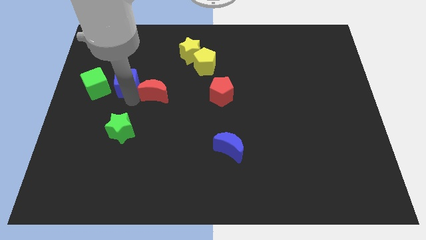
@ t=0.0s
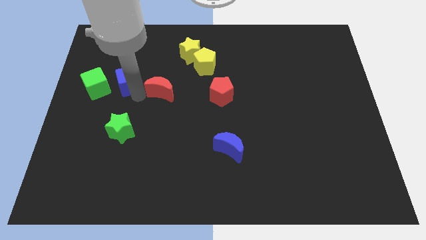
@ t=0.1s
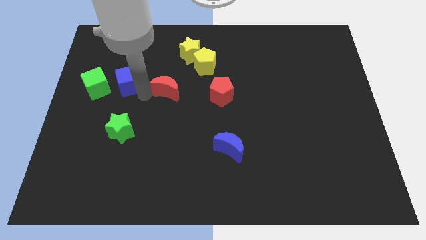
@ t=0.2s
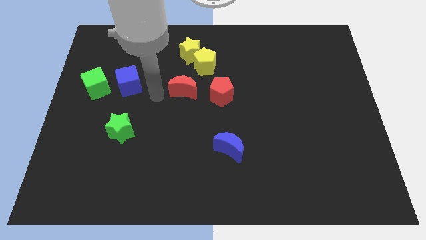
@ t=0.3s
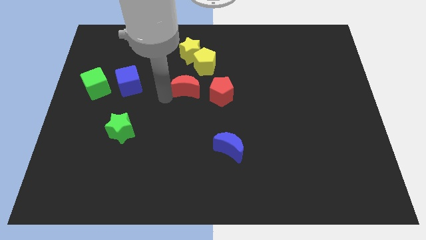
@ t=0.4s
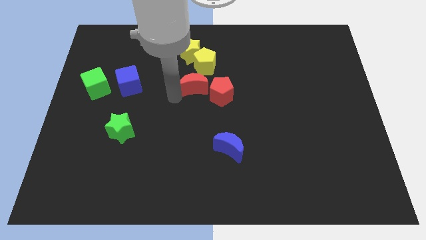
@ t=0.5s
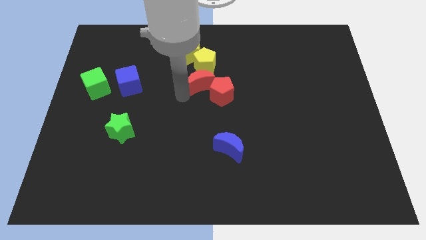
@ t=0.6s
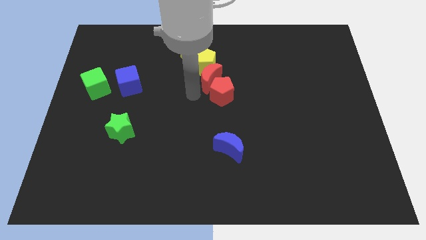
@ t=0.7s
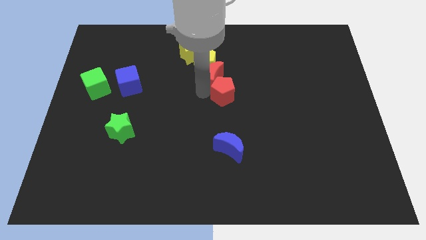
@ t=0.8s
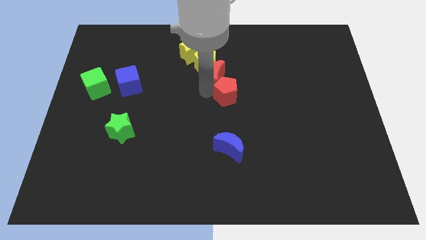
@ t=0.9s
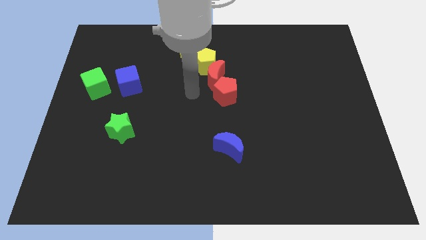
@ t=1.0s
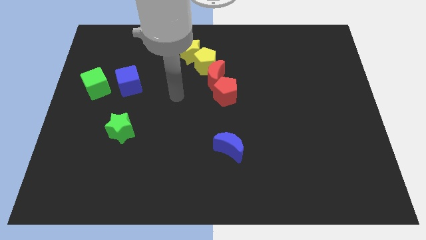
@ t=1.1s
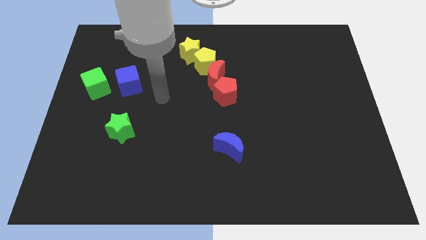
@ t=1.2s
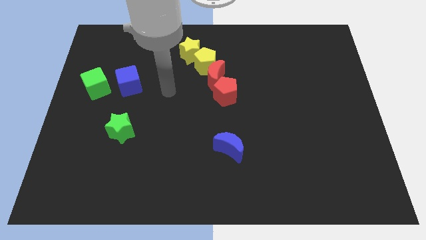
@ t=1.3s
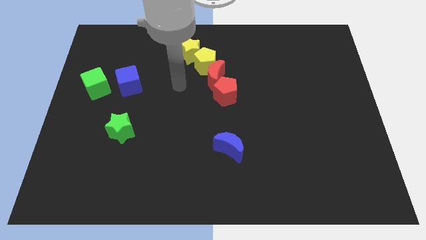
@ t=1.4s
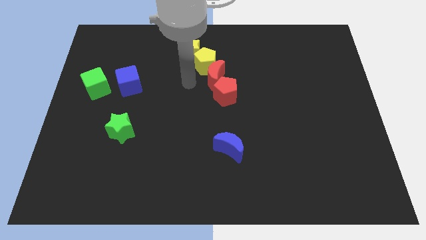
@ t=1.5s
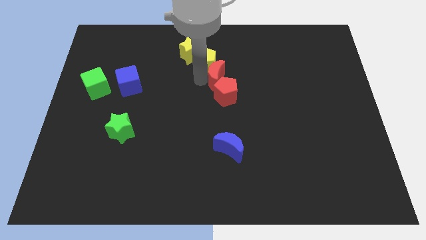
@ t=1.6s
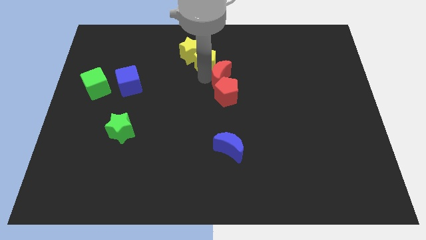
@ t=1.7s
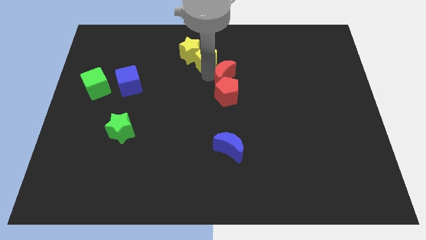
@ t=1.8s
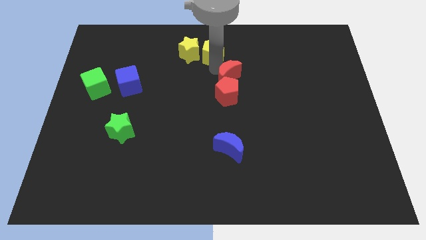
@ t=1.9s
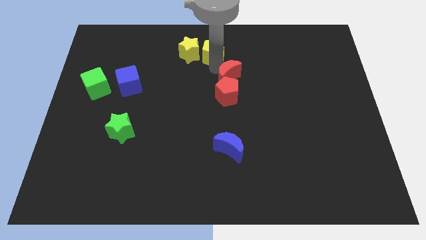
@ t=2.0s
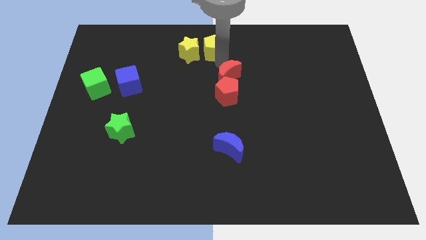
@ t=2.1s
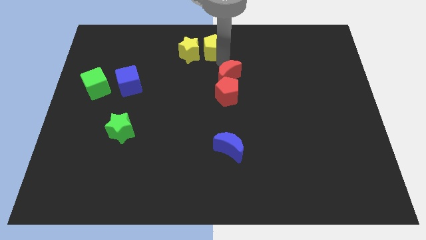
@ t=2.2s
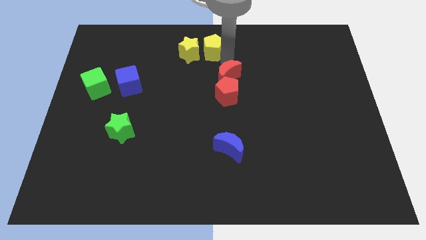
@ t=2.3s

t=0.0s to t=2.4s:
separate yellow pentagon and red crescent

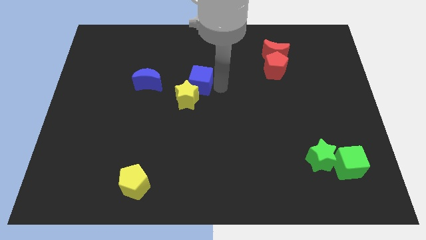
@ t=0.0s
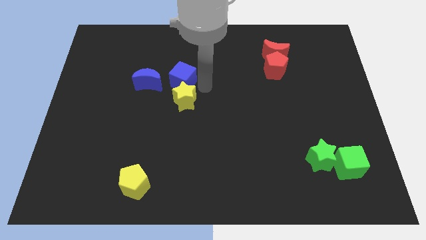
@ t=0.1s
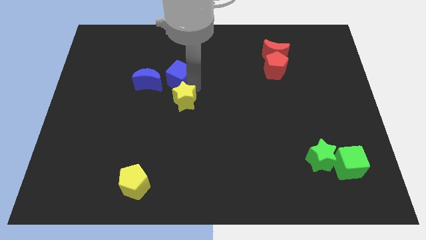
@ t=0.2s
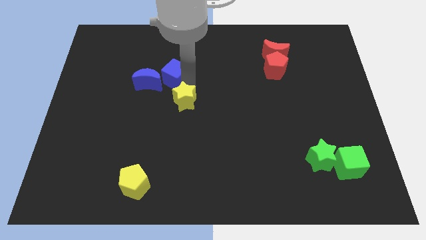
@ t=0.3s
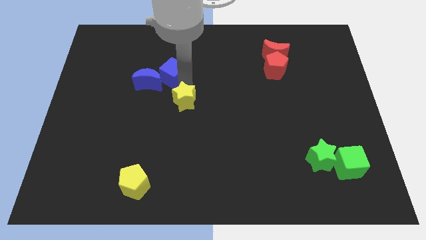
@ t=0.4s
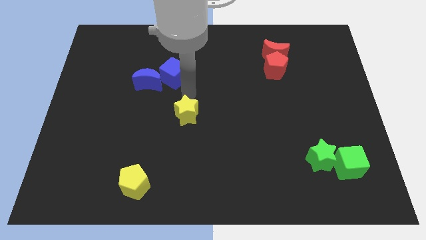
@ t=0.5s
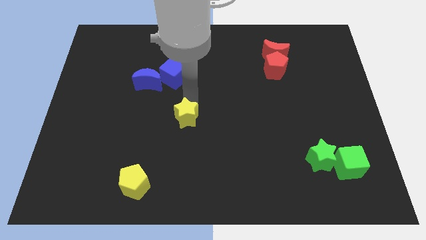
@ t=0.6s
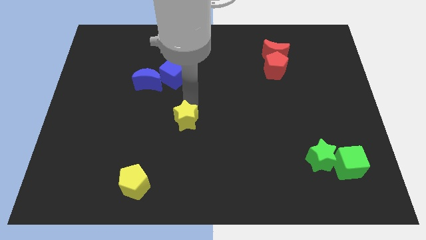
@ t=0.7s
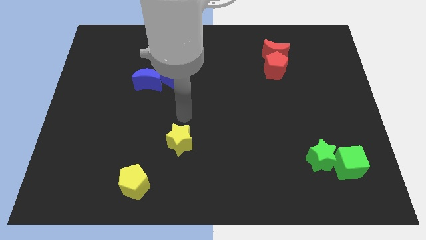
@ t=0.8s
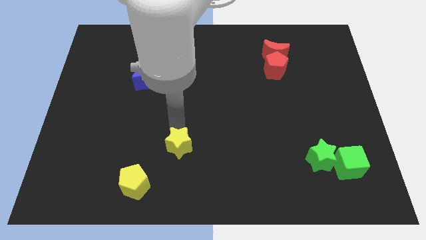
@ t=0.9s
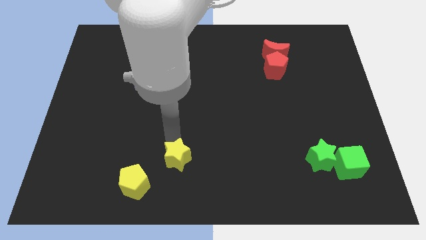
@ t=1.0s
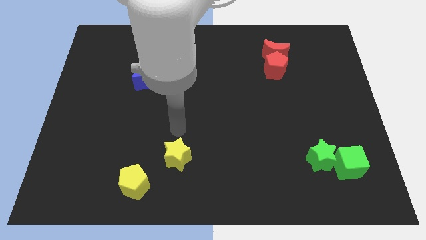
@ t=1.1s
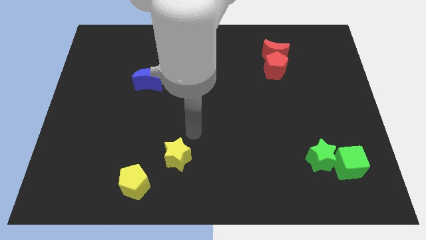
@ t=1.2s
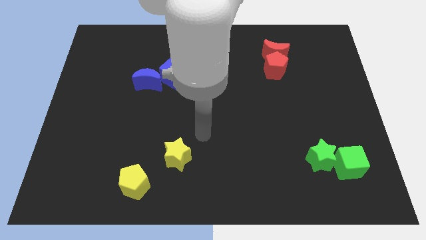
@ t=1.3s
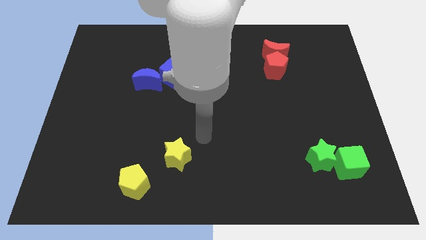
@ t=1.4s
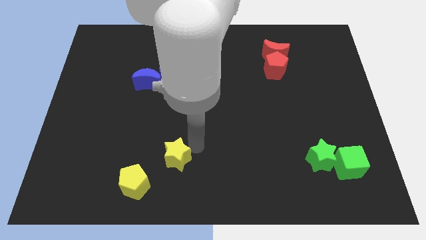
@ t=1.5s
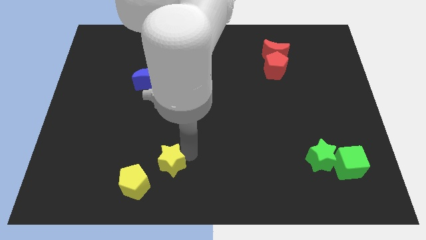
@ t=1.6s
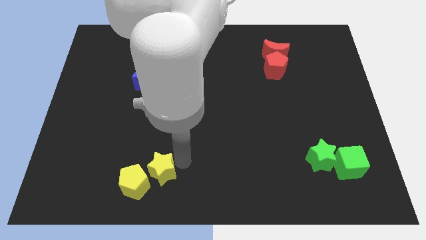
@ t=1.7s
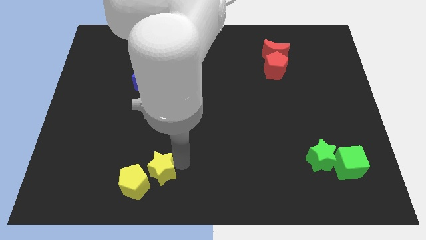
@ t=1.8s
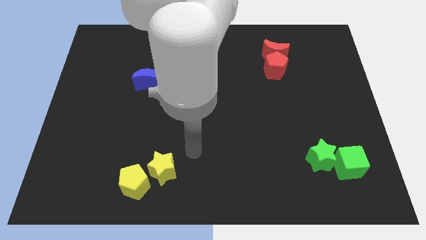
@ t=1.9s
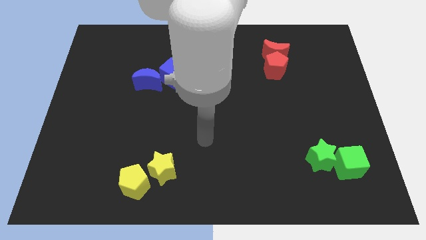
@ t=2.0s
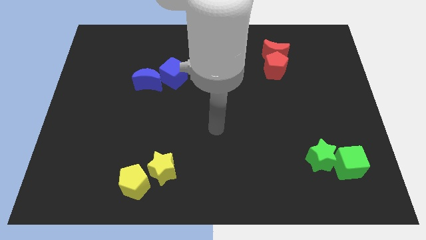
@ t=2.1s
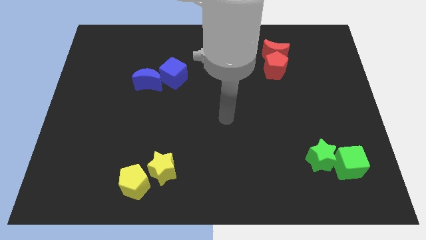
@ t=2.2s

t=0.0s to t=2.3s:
move the yellow star towards the top right side of the yellow pentagon

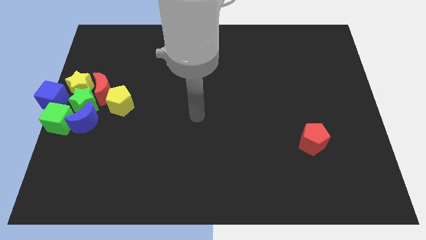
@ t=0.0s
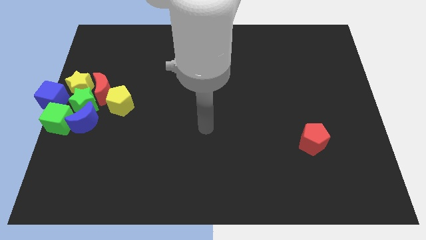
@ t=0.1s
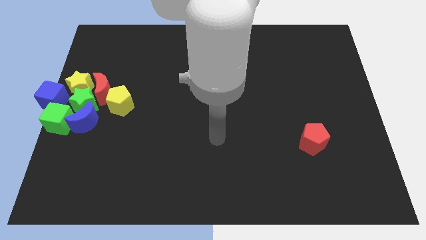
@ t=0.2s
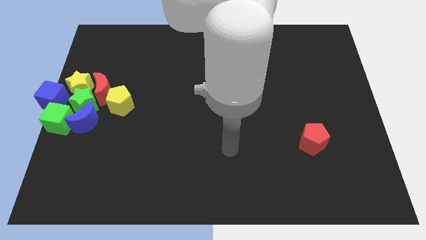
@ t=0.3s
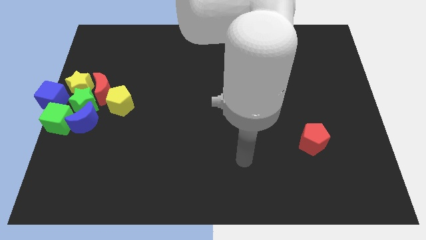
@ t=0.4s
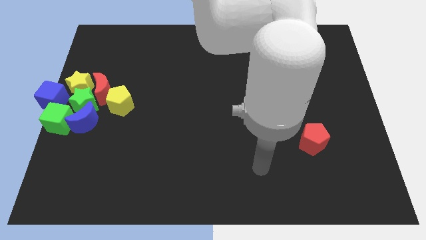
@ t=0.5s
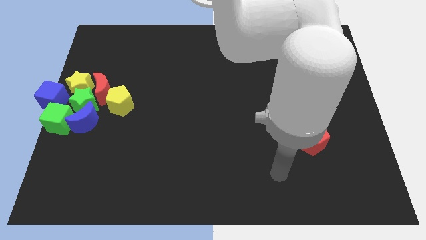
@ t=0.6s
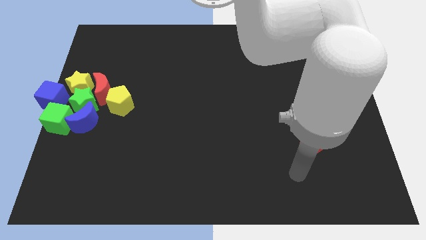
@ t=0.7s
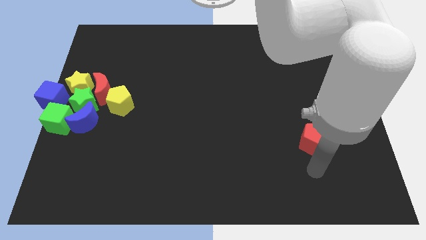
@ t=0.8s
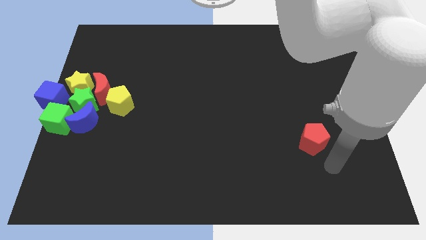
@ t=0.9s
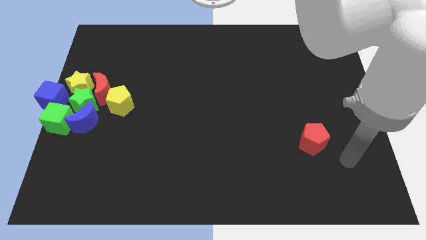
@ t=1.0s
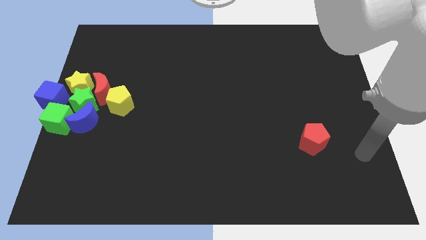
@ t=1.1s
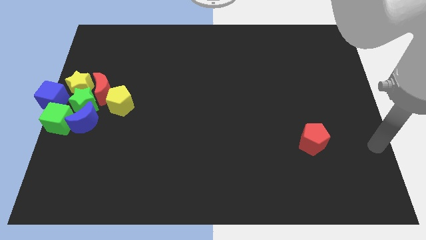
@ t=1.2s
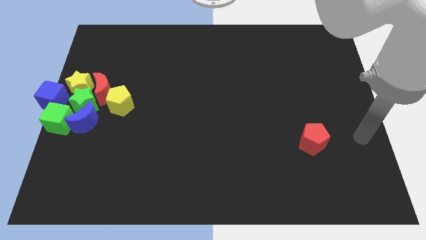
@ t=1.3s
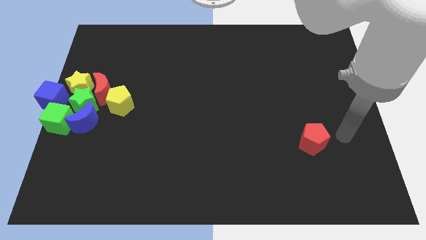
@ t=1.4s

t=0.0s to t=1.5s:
go near the red pentagon

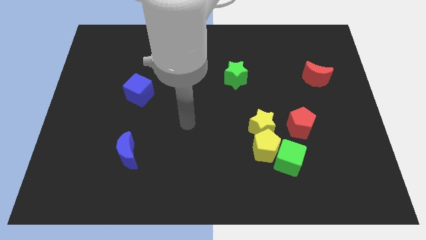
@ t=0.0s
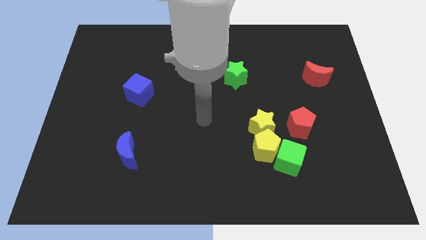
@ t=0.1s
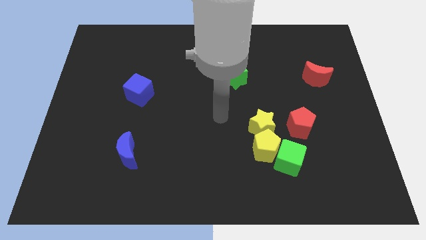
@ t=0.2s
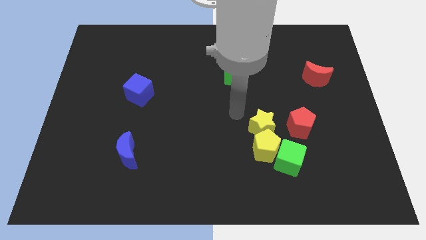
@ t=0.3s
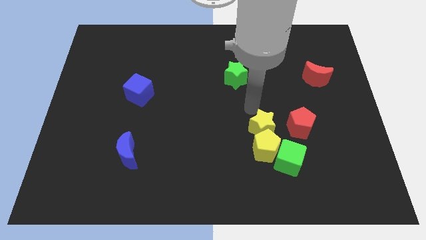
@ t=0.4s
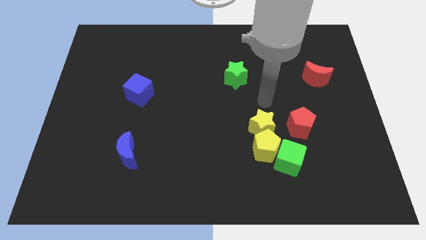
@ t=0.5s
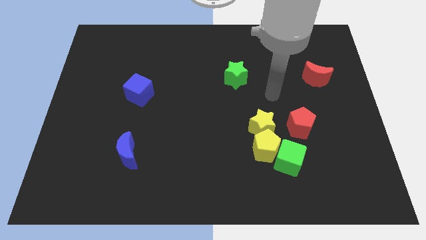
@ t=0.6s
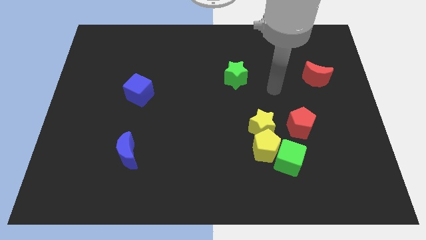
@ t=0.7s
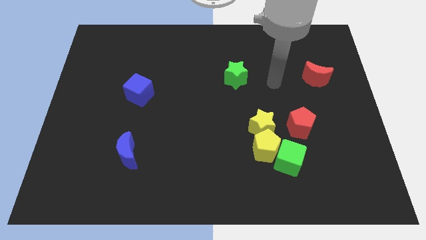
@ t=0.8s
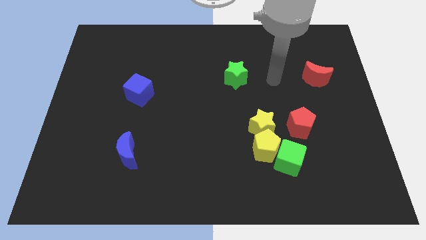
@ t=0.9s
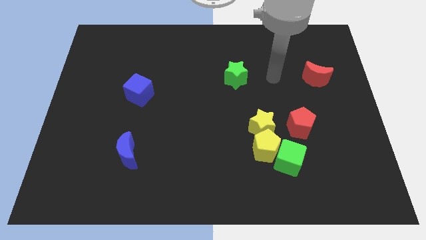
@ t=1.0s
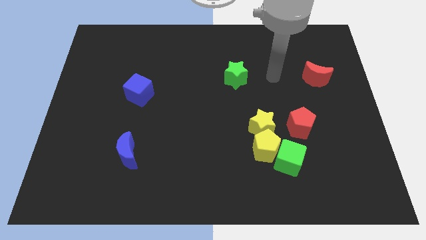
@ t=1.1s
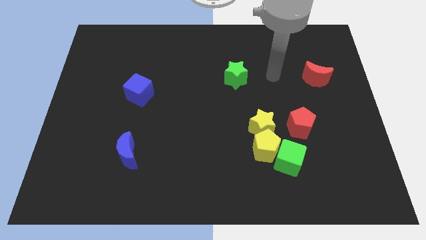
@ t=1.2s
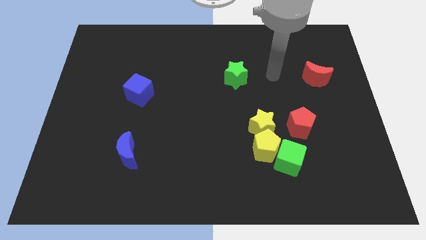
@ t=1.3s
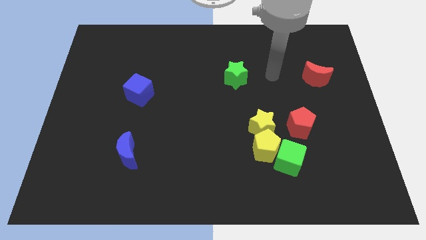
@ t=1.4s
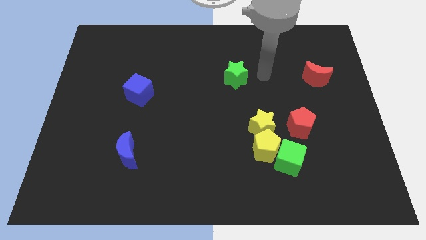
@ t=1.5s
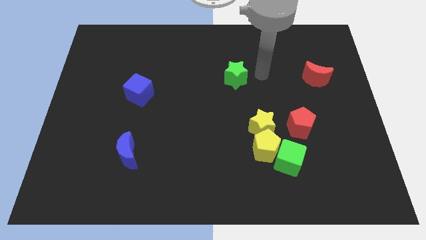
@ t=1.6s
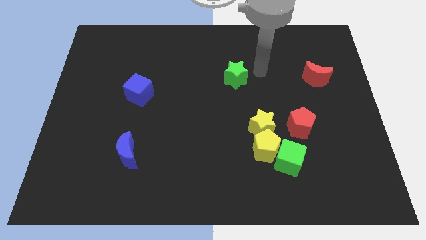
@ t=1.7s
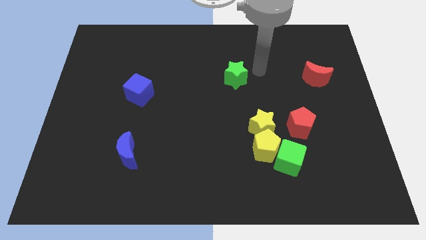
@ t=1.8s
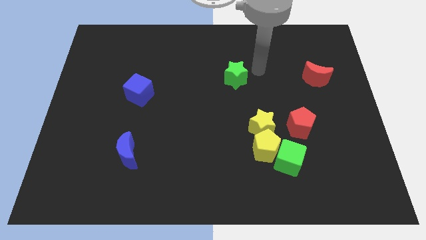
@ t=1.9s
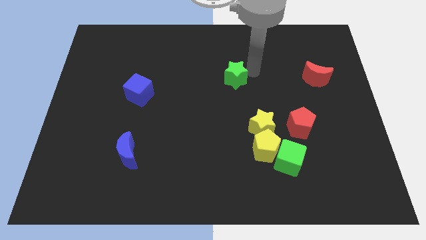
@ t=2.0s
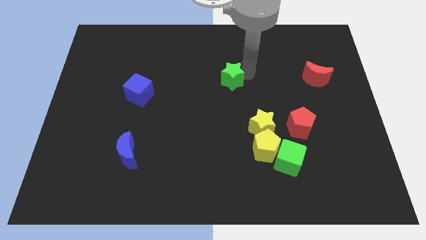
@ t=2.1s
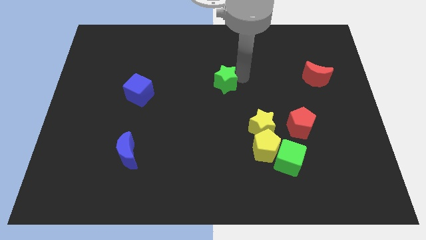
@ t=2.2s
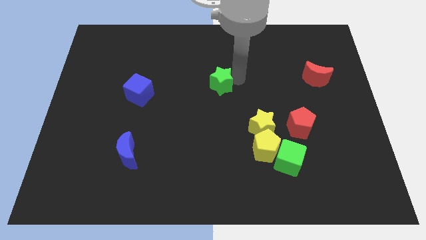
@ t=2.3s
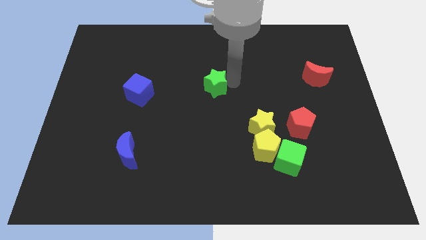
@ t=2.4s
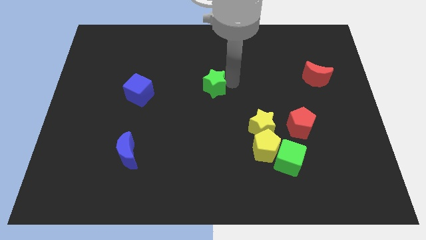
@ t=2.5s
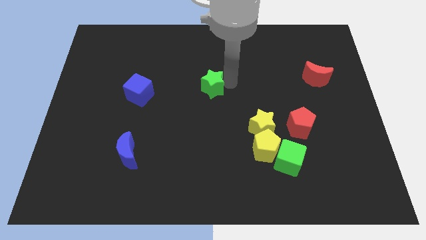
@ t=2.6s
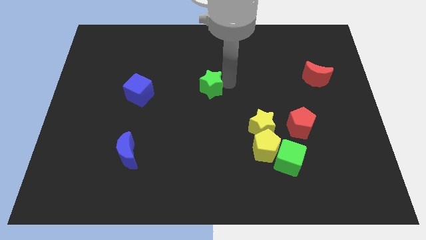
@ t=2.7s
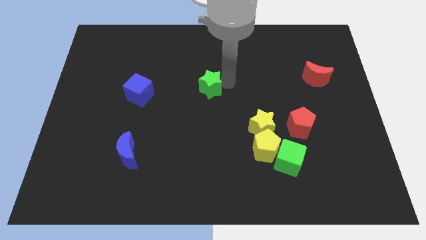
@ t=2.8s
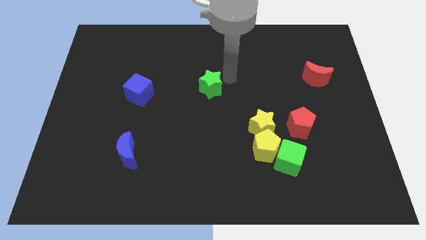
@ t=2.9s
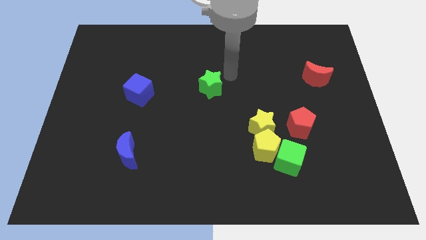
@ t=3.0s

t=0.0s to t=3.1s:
push the green star slightly to the bottom of the board
